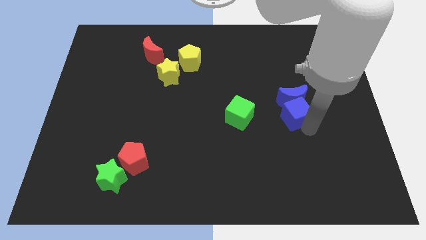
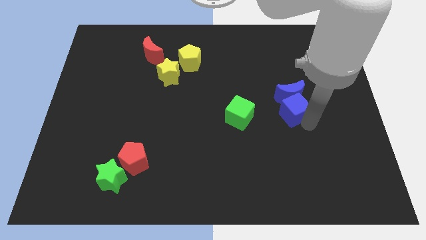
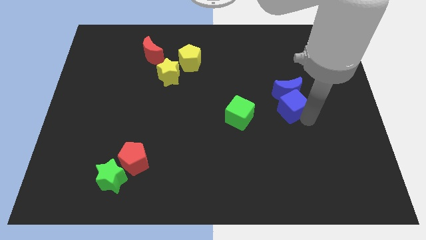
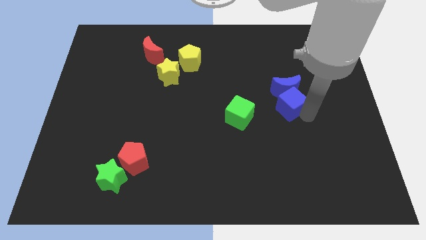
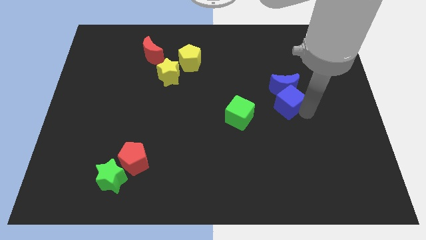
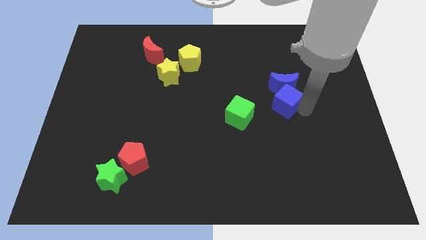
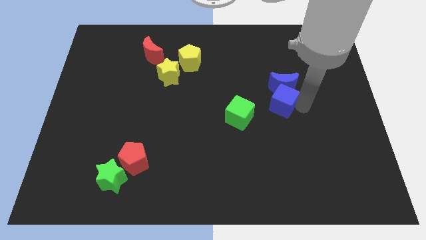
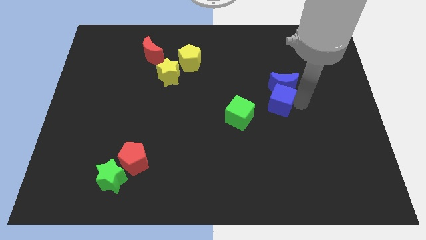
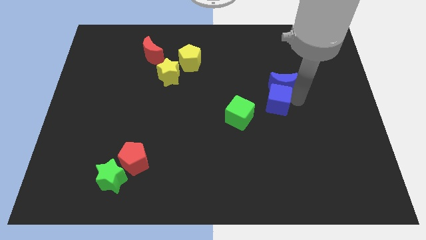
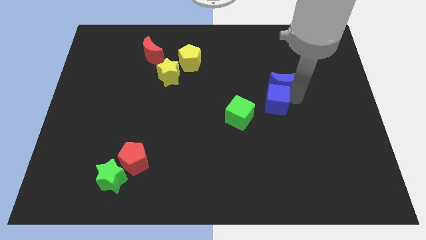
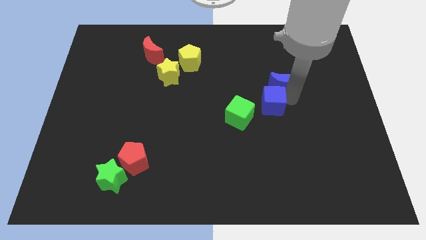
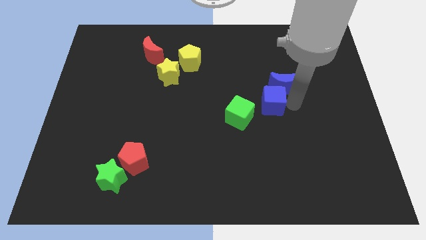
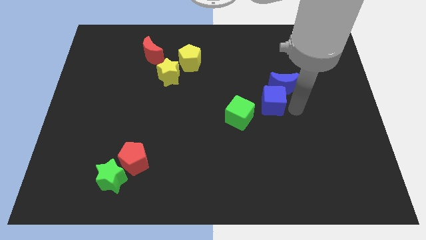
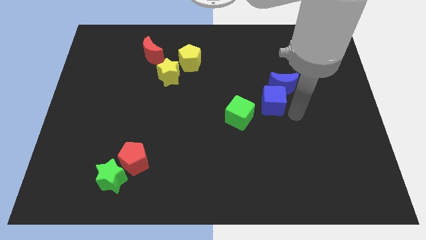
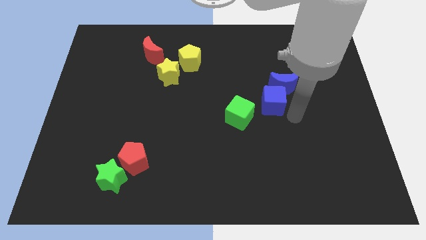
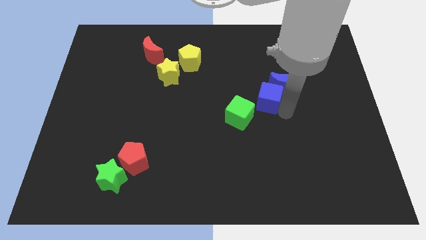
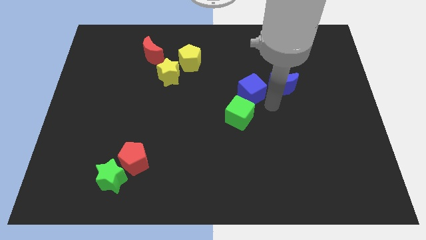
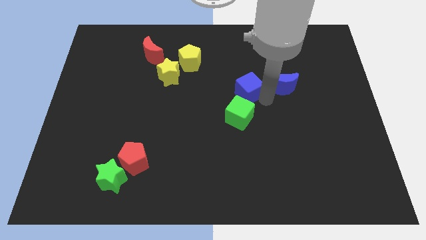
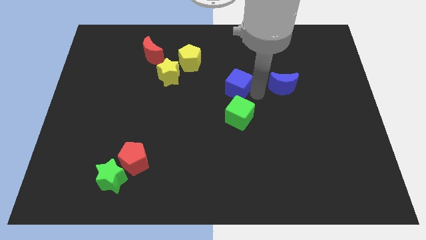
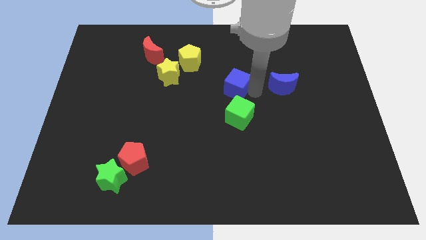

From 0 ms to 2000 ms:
place blue cube above green cube

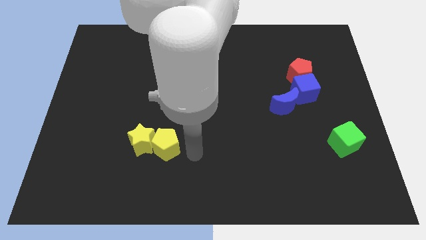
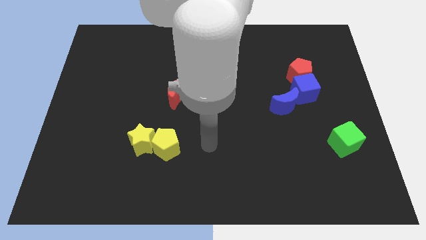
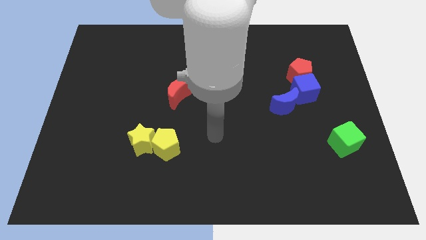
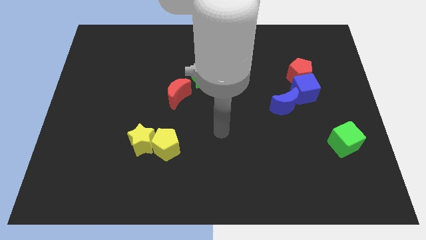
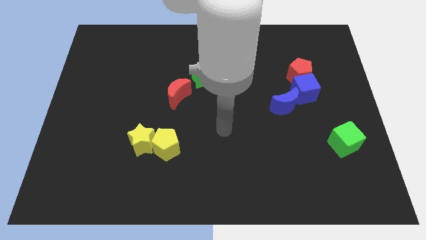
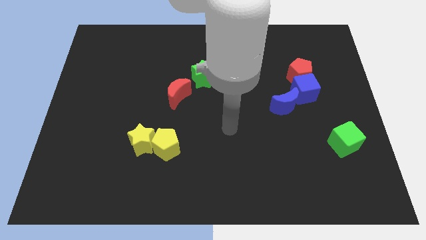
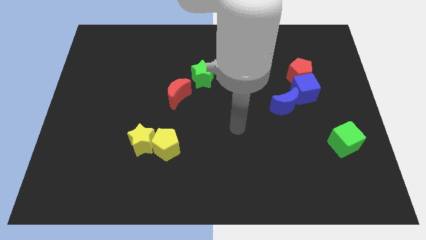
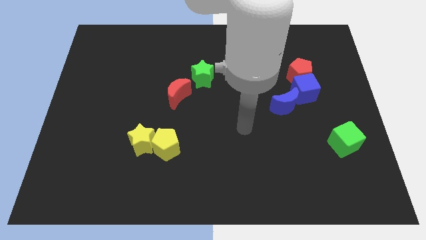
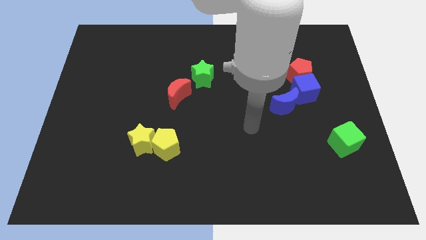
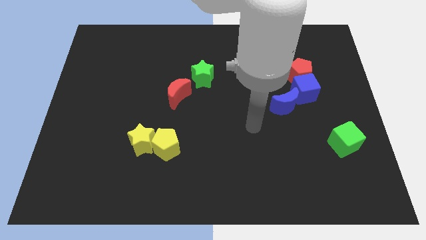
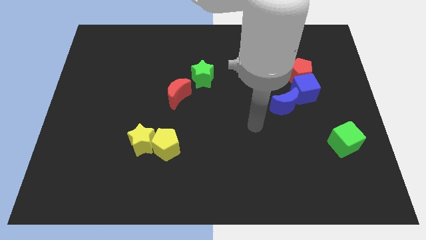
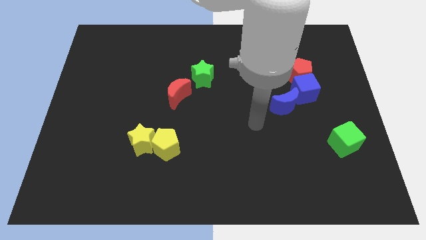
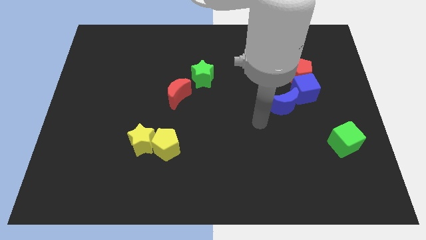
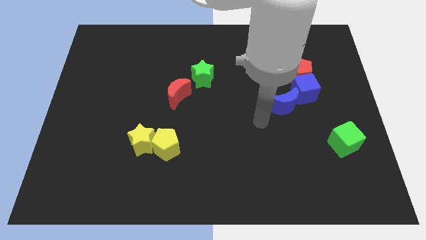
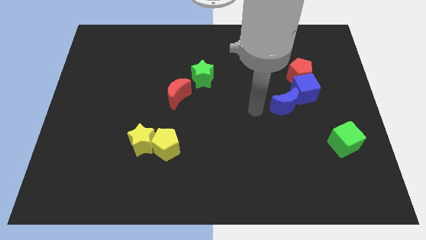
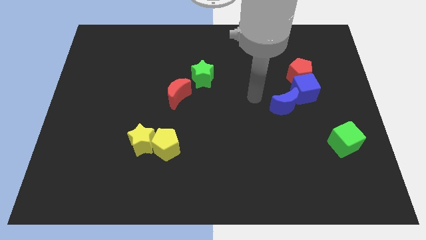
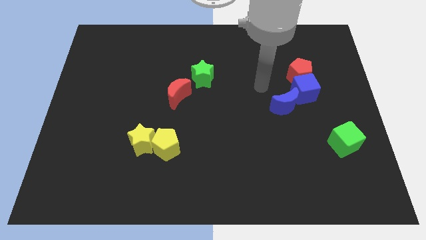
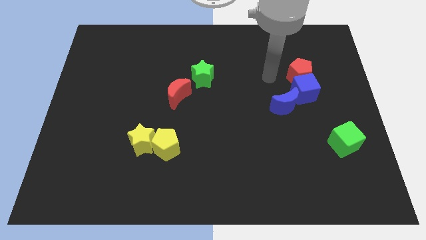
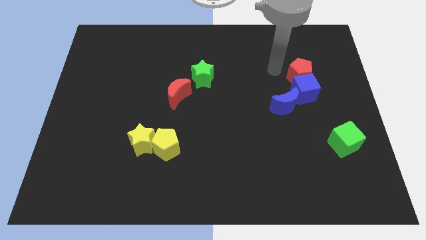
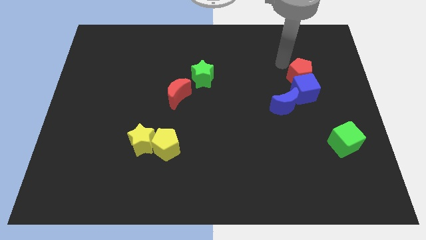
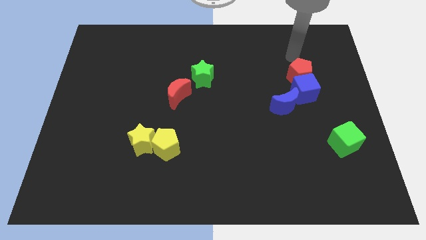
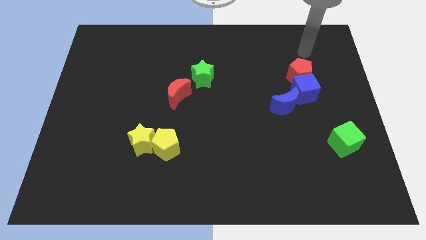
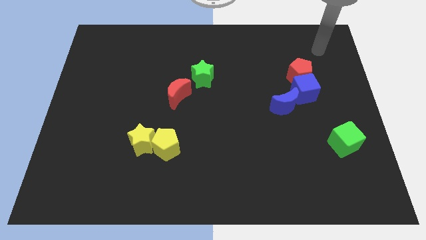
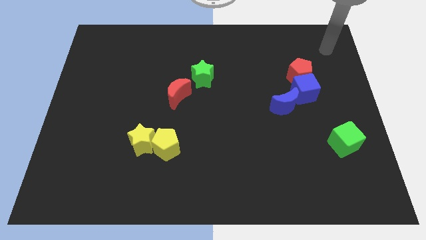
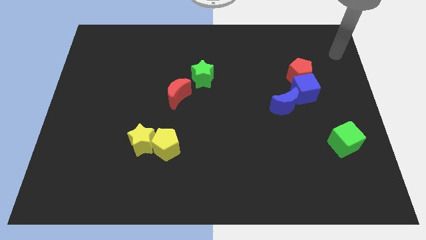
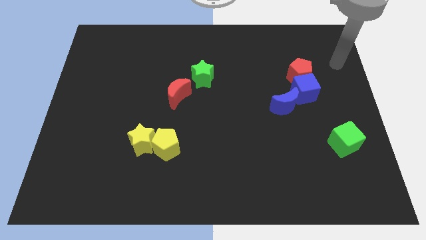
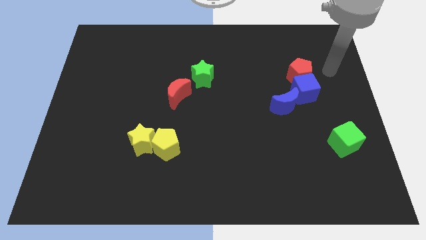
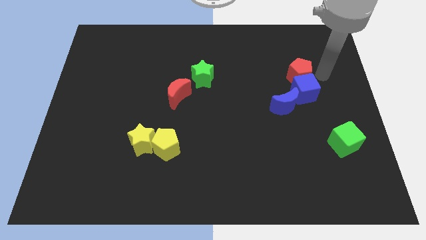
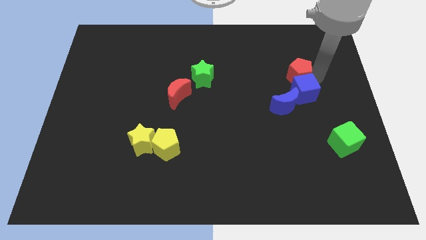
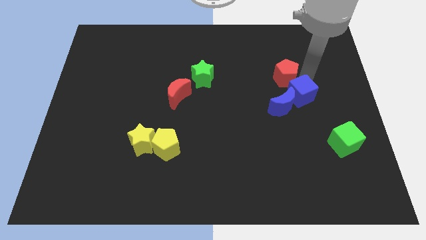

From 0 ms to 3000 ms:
place your arm at top right side of blue cube

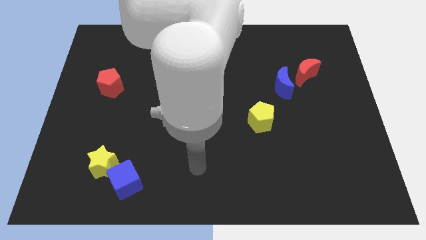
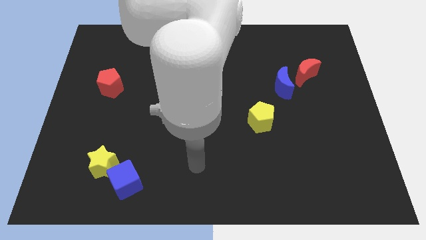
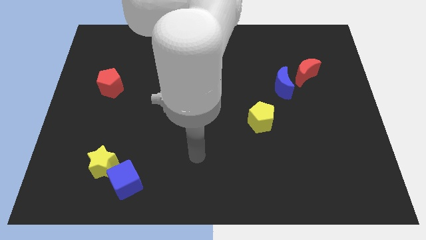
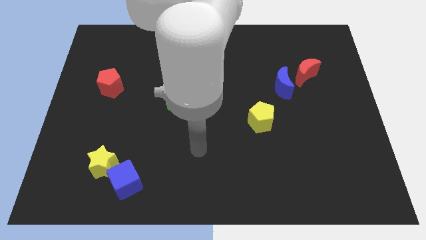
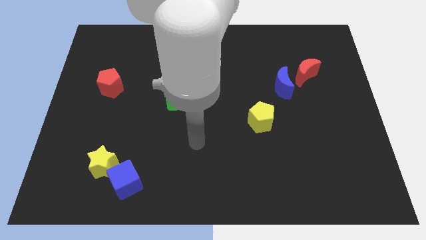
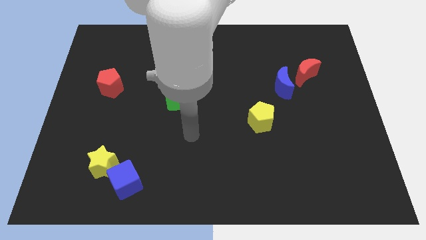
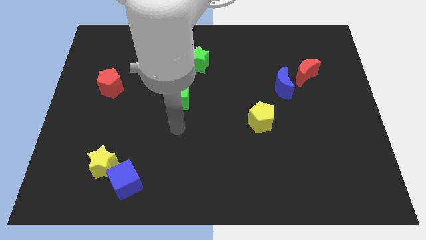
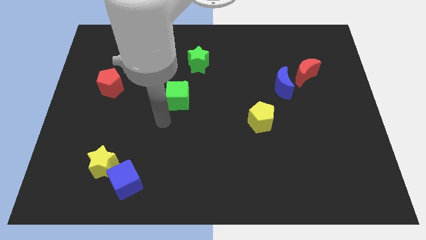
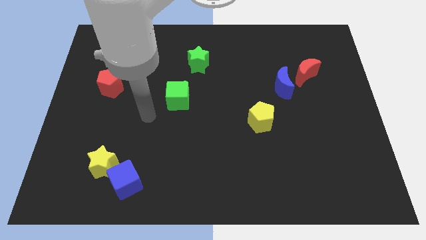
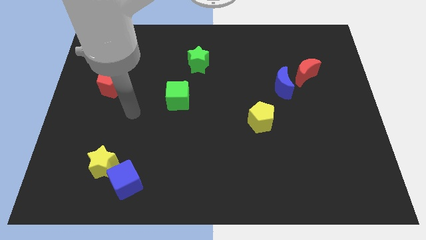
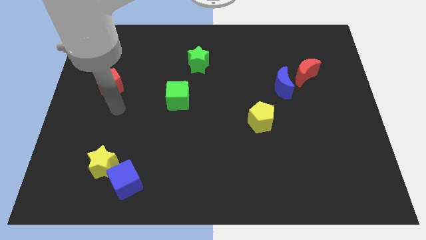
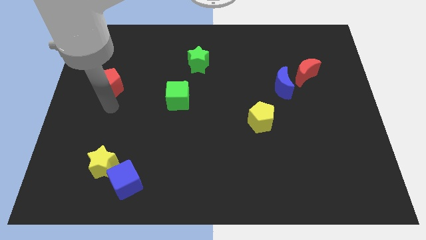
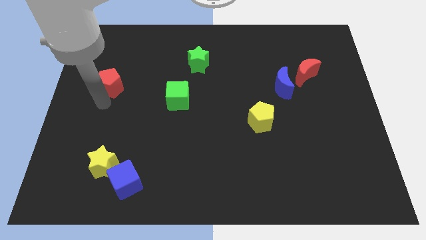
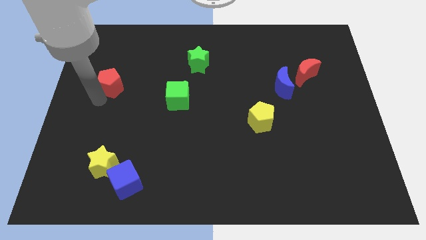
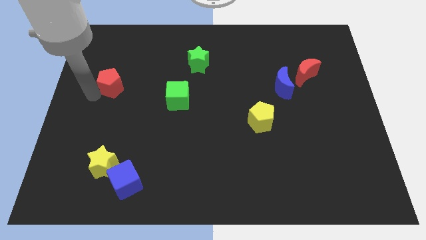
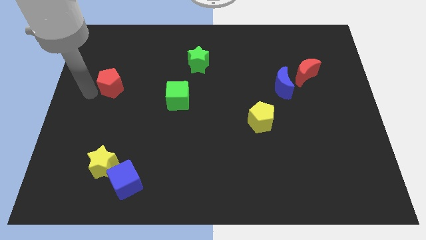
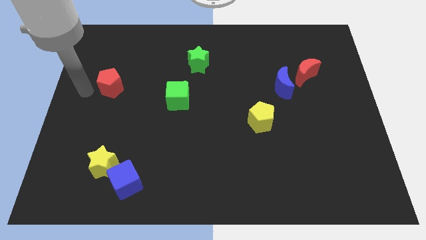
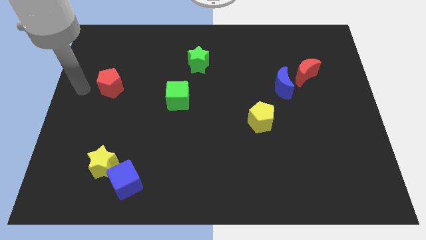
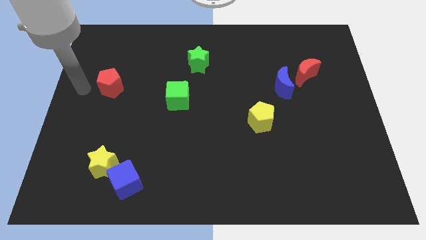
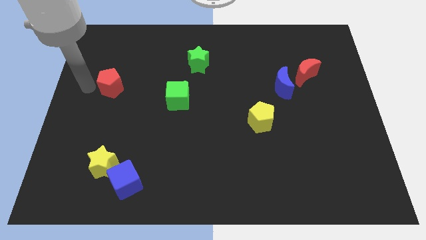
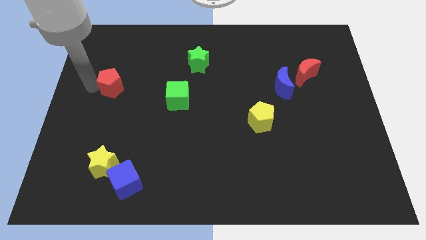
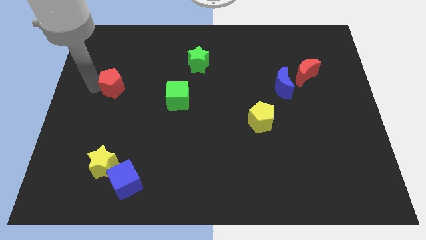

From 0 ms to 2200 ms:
point the arm at the left side of the red pentagon

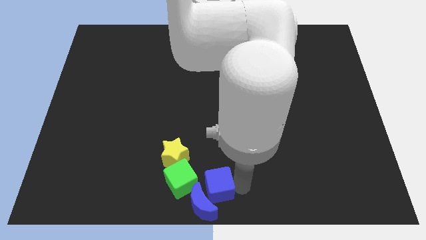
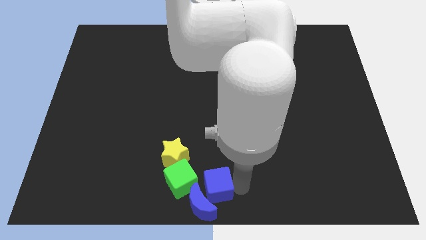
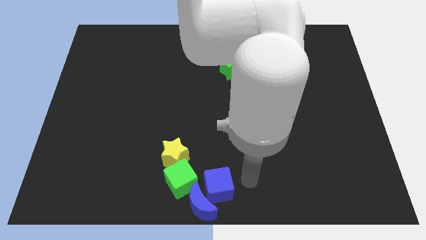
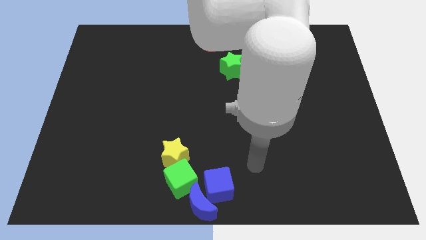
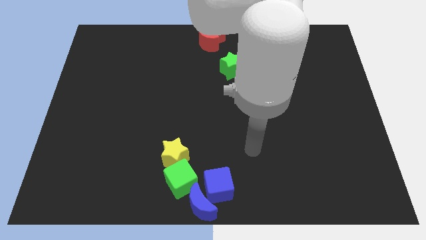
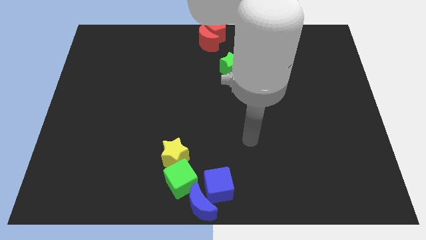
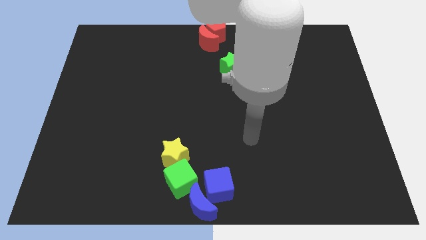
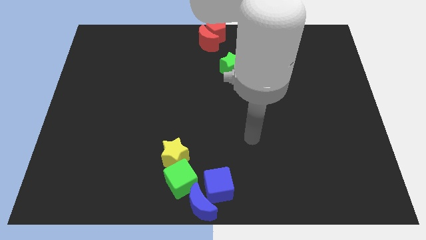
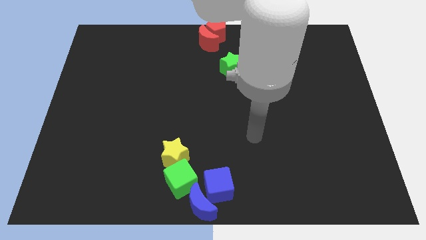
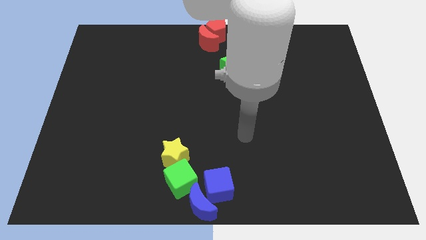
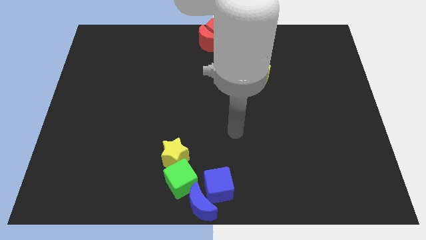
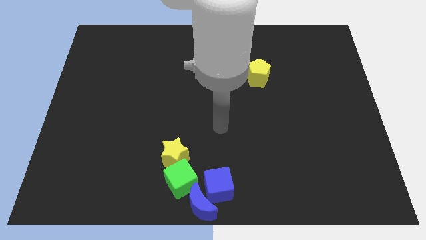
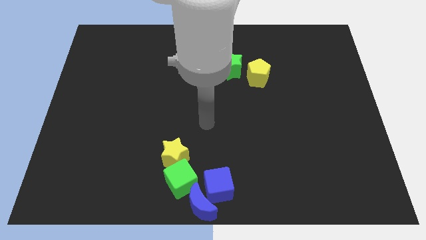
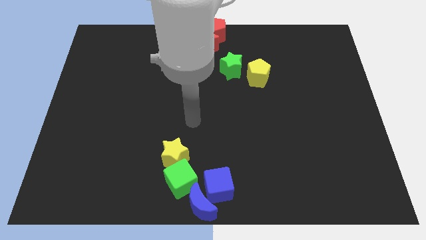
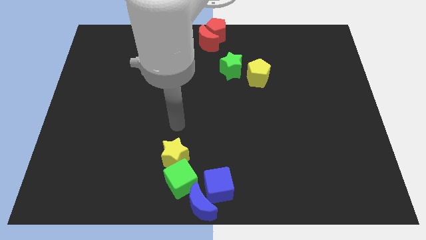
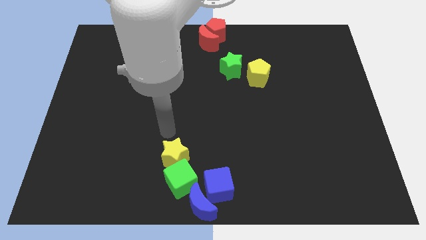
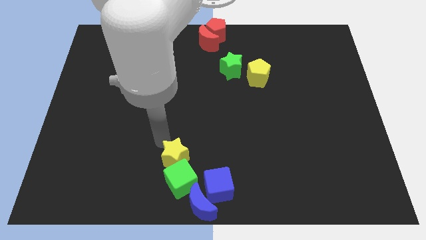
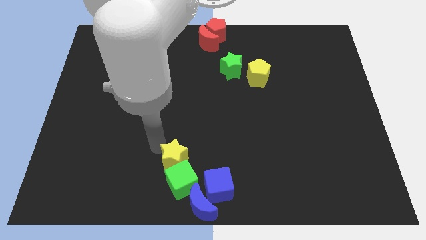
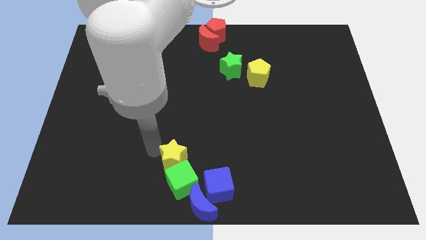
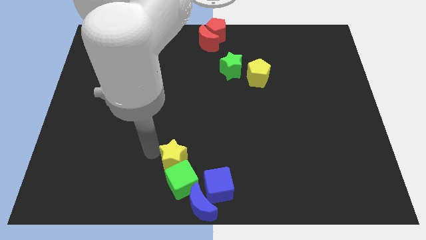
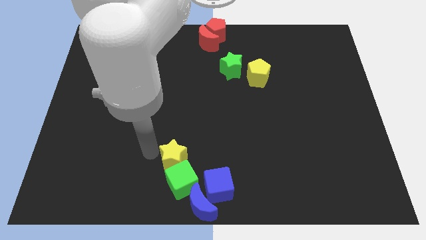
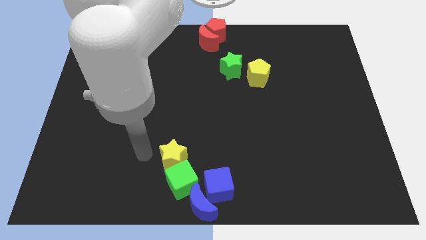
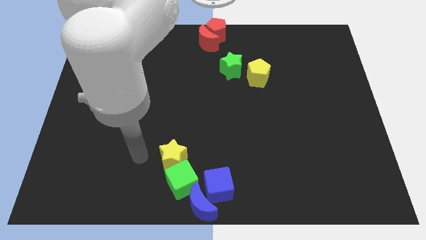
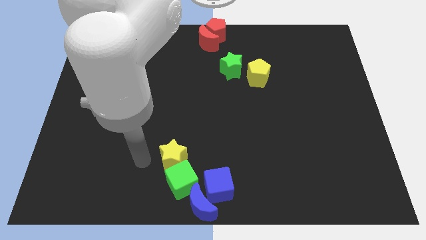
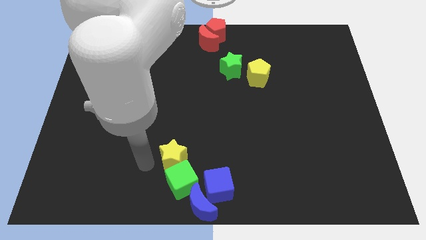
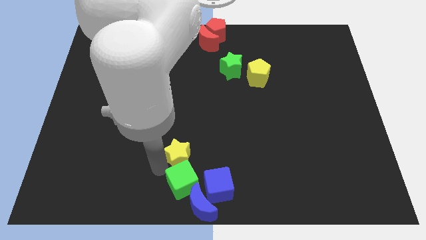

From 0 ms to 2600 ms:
place the arm left to the yellow star
